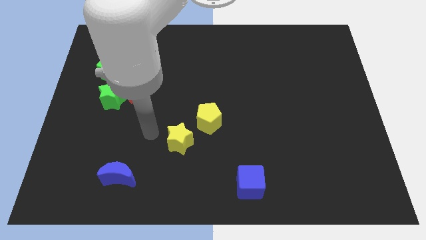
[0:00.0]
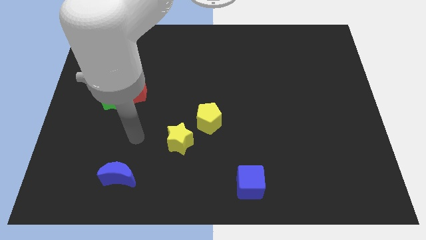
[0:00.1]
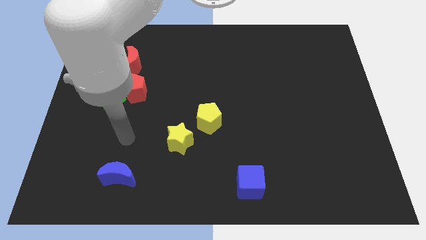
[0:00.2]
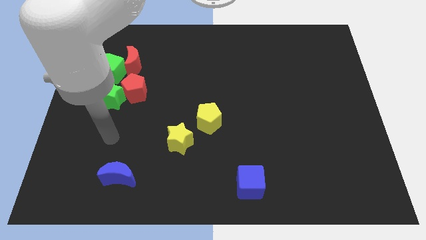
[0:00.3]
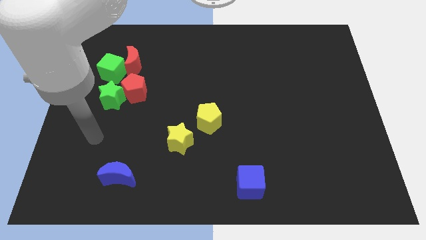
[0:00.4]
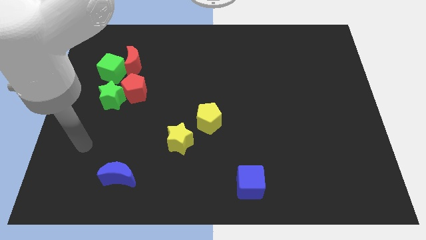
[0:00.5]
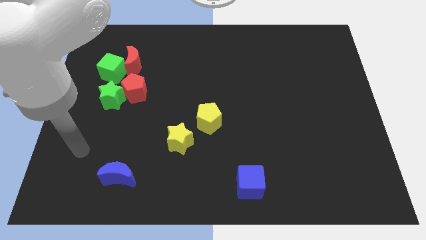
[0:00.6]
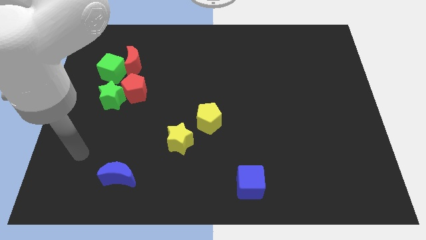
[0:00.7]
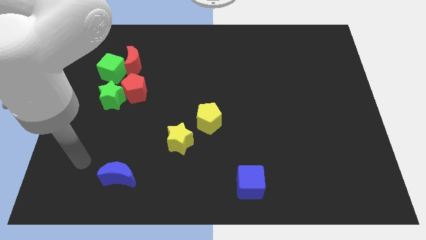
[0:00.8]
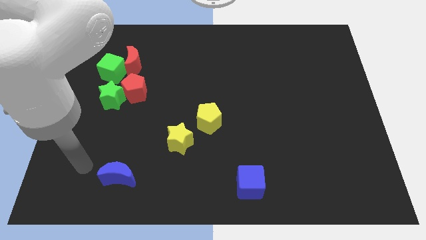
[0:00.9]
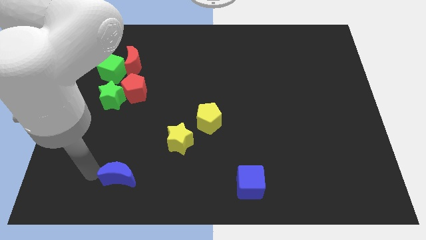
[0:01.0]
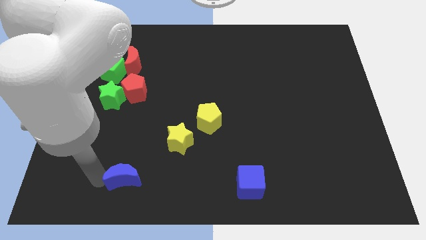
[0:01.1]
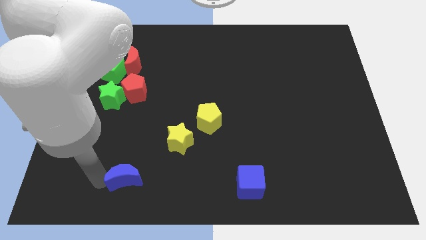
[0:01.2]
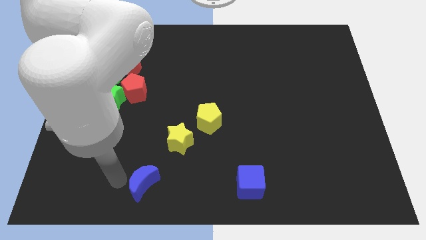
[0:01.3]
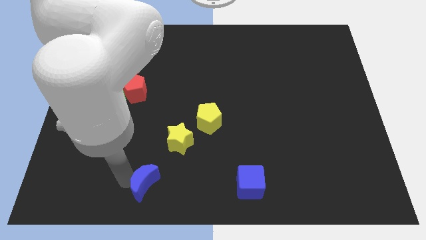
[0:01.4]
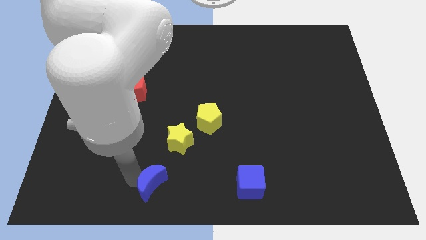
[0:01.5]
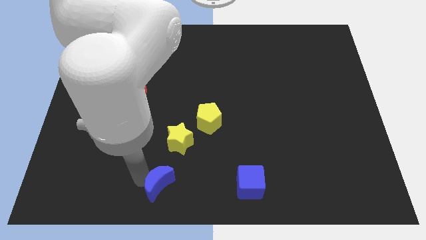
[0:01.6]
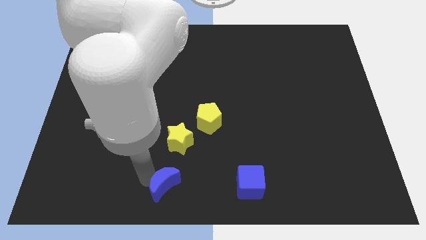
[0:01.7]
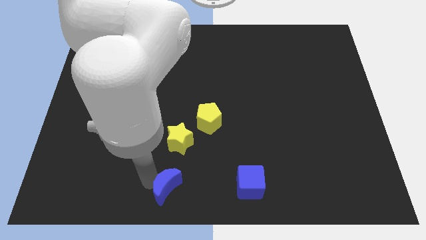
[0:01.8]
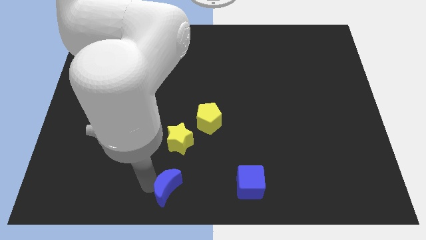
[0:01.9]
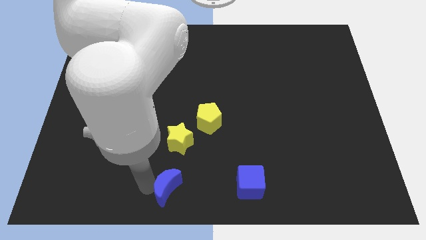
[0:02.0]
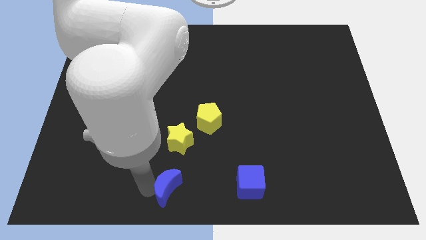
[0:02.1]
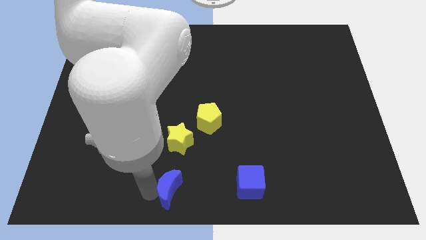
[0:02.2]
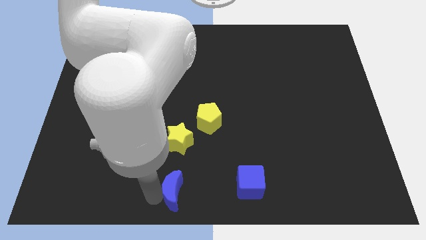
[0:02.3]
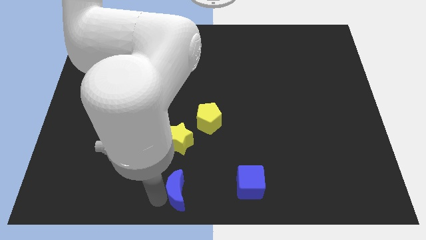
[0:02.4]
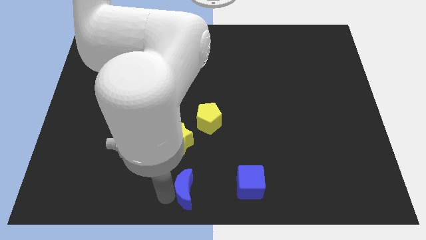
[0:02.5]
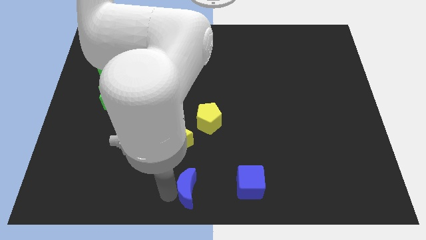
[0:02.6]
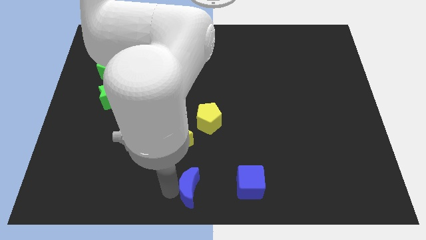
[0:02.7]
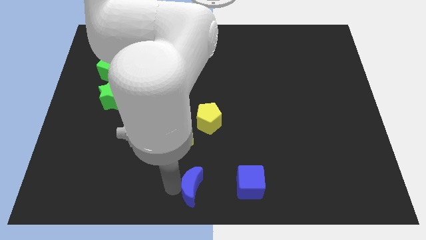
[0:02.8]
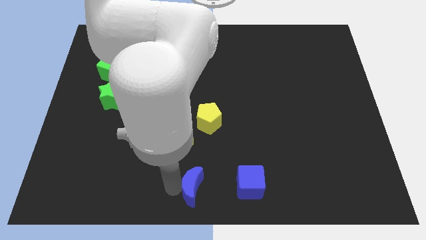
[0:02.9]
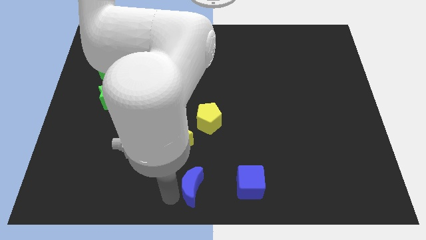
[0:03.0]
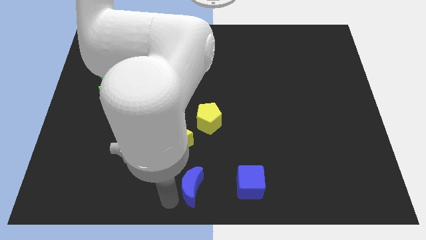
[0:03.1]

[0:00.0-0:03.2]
push the blue moon closer to the blue cube

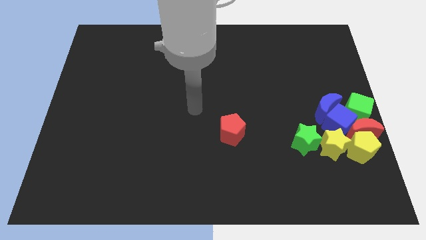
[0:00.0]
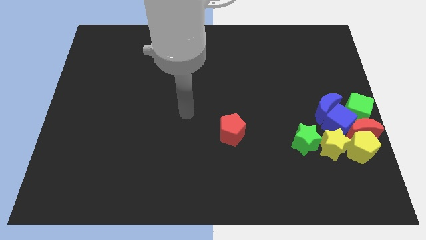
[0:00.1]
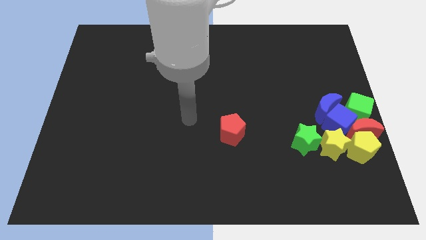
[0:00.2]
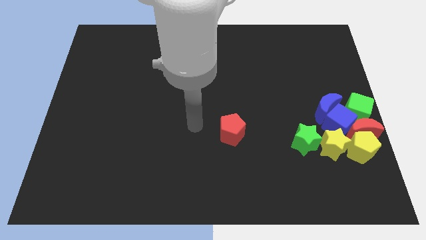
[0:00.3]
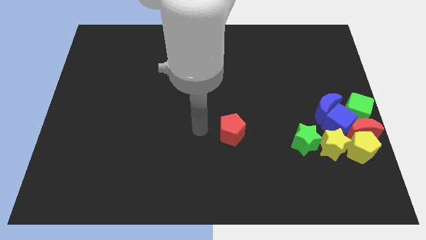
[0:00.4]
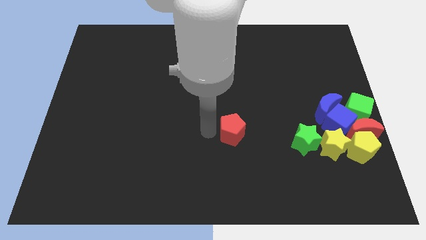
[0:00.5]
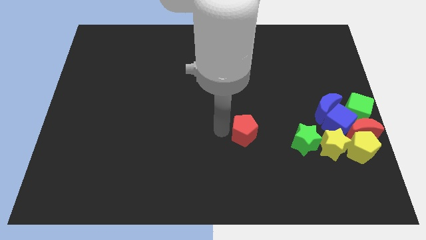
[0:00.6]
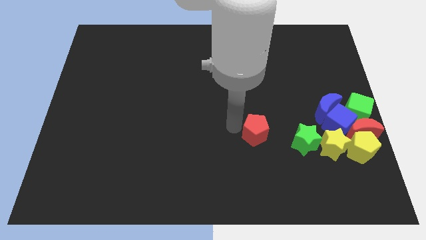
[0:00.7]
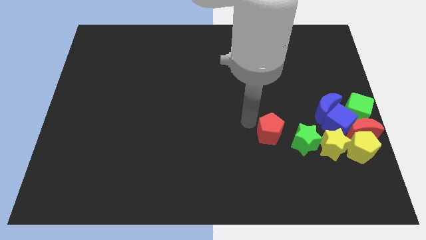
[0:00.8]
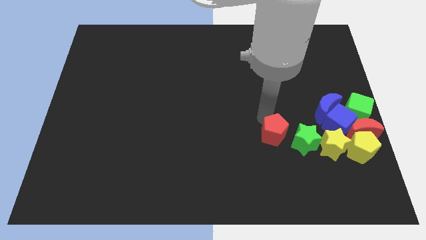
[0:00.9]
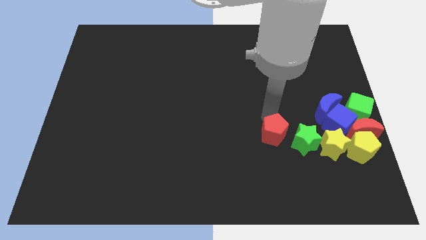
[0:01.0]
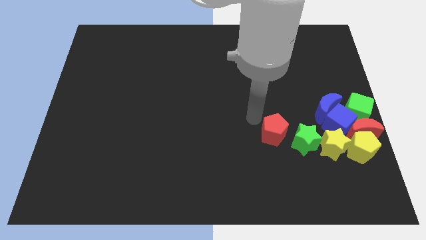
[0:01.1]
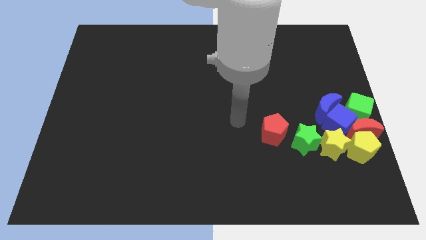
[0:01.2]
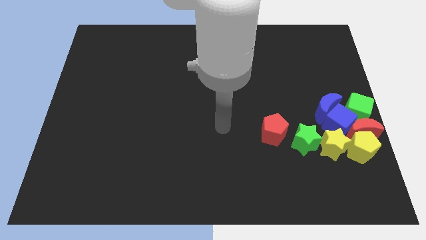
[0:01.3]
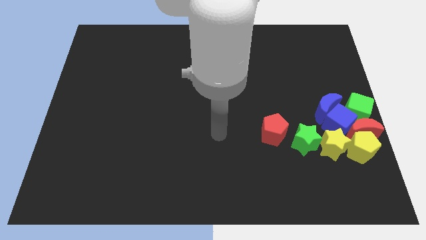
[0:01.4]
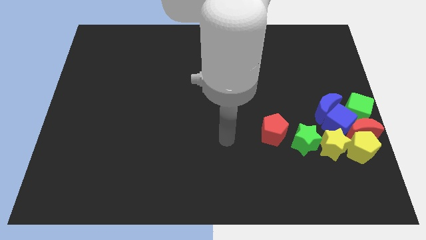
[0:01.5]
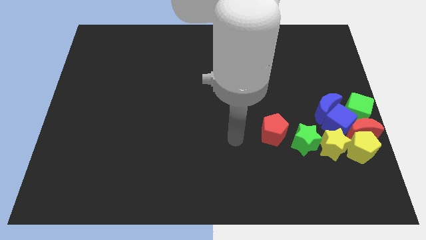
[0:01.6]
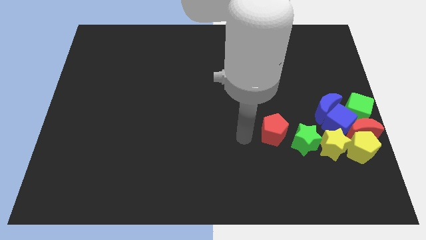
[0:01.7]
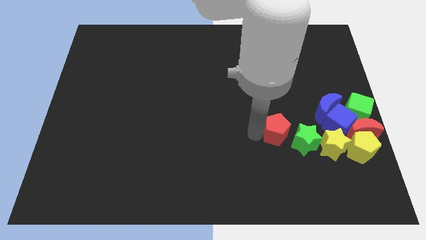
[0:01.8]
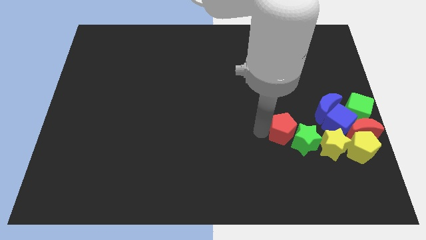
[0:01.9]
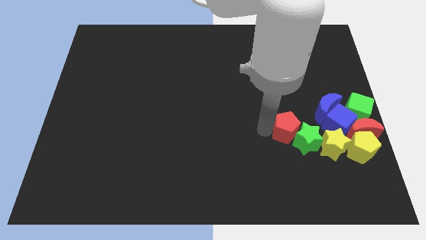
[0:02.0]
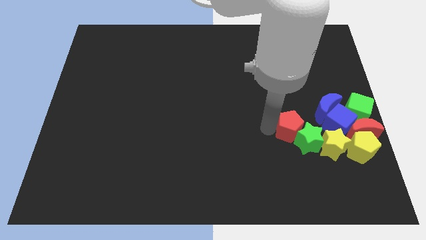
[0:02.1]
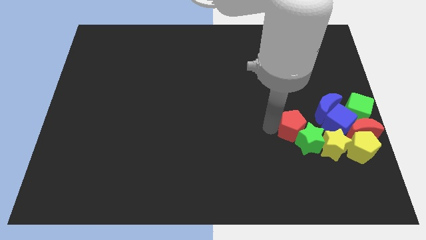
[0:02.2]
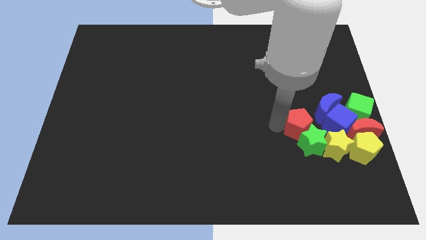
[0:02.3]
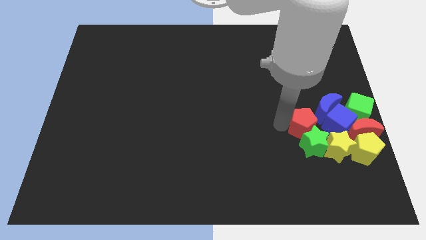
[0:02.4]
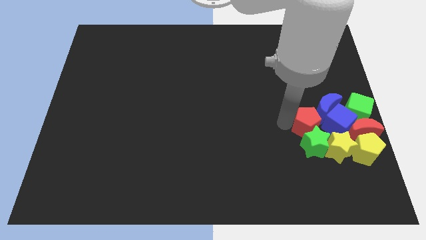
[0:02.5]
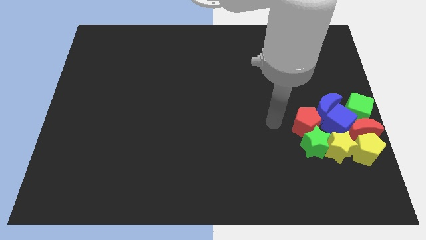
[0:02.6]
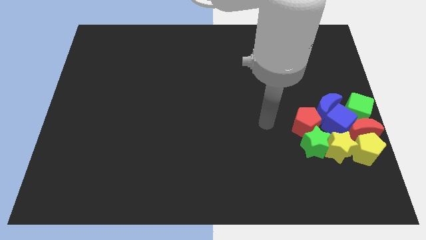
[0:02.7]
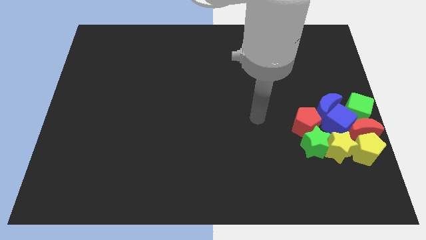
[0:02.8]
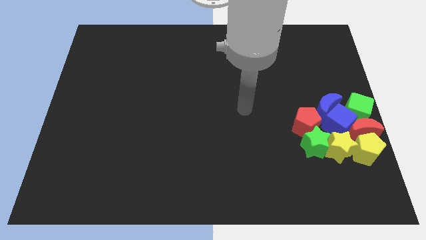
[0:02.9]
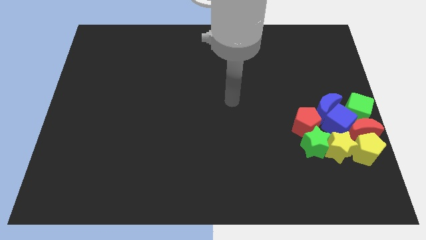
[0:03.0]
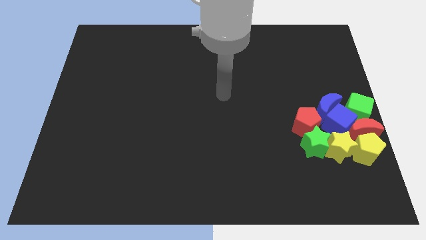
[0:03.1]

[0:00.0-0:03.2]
move the red pentagon into the group of blocks

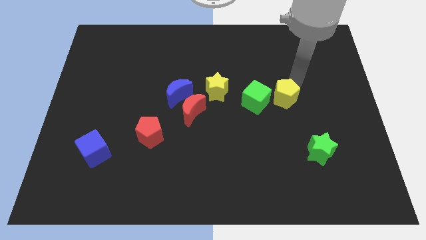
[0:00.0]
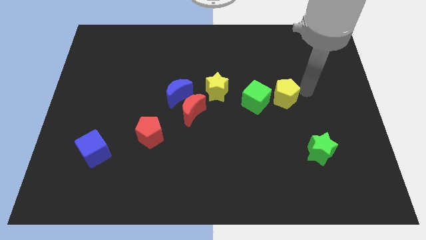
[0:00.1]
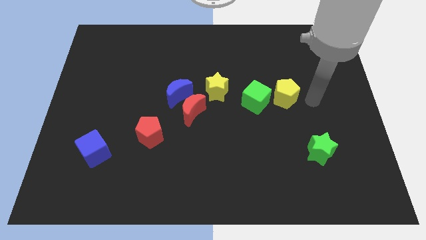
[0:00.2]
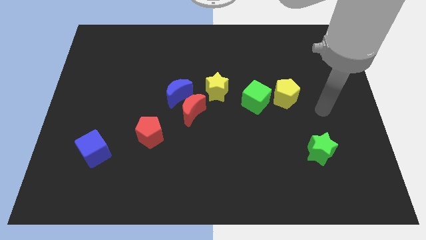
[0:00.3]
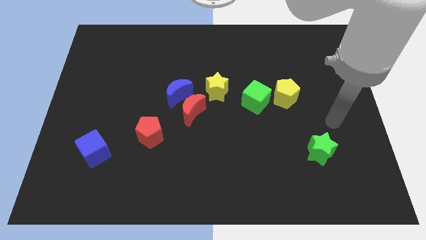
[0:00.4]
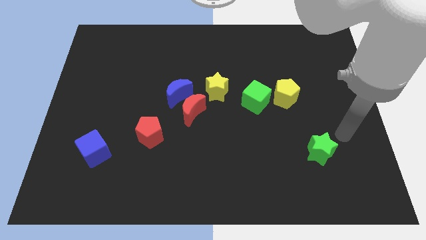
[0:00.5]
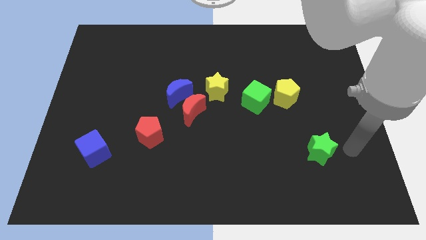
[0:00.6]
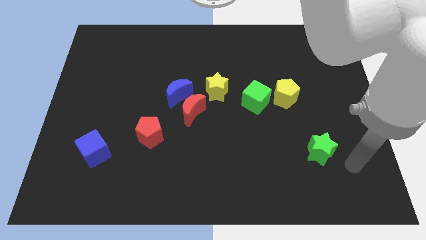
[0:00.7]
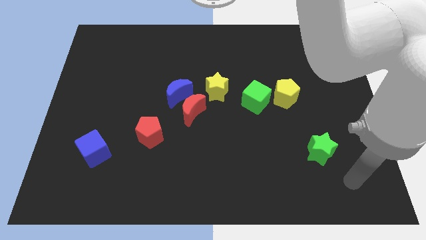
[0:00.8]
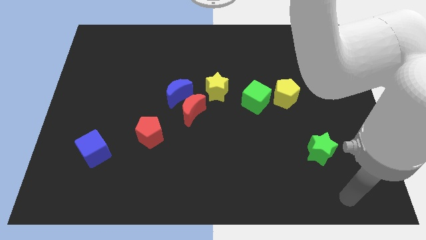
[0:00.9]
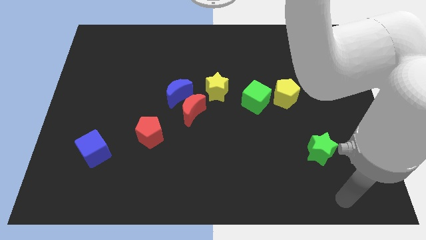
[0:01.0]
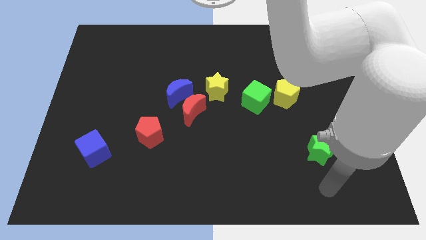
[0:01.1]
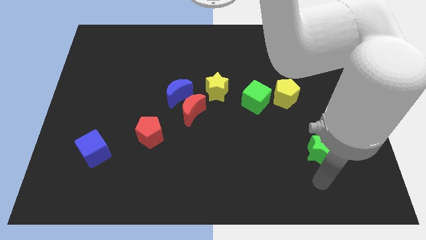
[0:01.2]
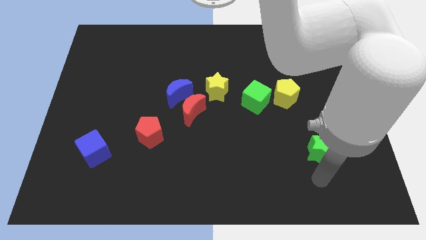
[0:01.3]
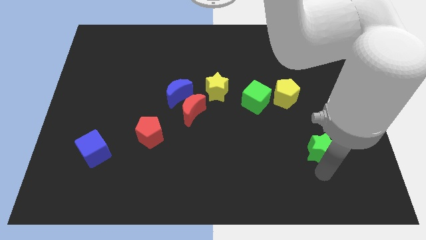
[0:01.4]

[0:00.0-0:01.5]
move your hand to the bottom of the green star

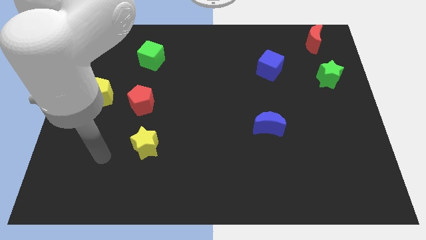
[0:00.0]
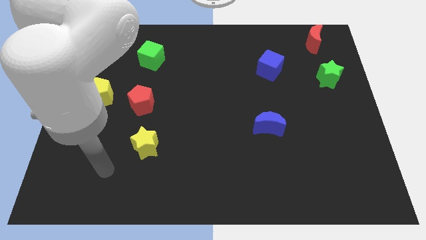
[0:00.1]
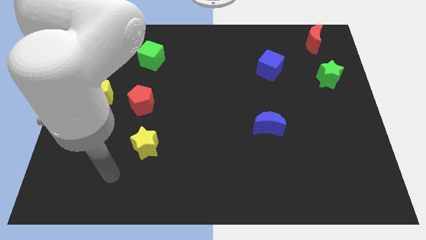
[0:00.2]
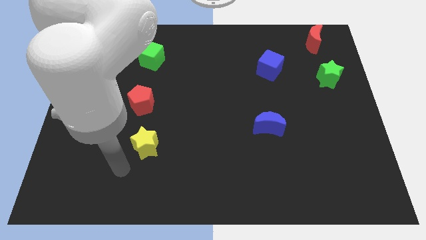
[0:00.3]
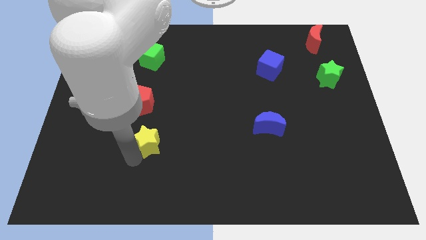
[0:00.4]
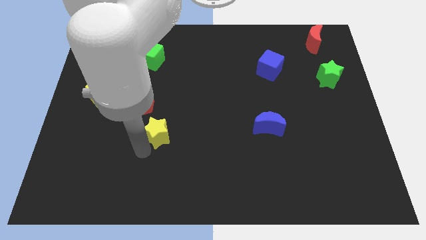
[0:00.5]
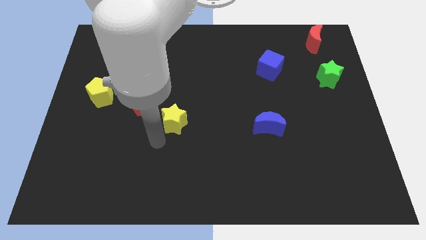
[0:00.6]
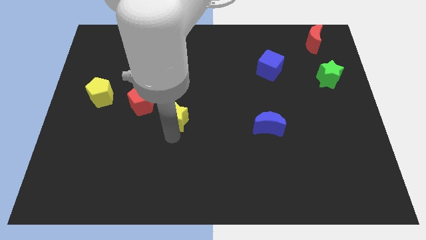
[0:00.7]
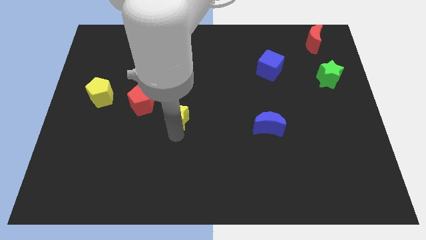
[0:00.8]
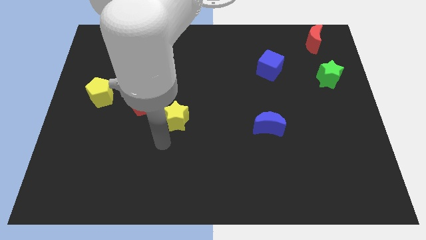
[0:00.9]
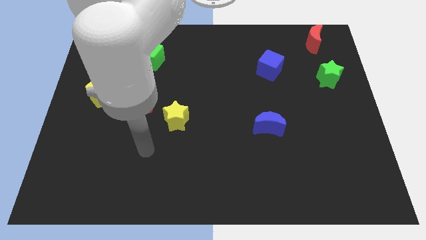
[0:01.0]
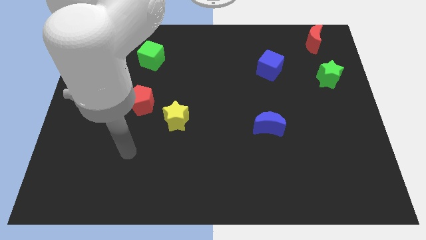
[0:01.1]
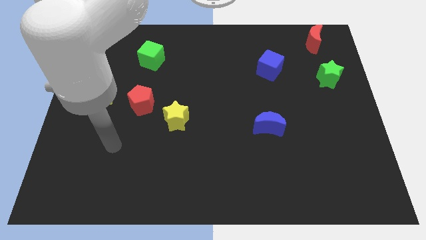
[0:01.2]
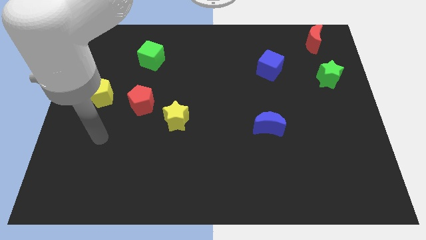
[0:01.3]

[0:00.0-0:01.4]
push the yellow star upward
